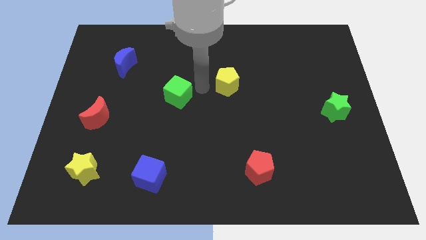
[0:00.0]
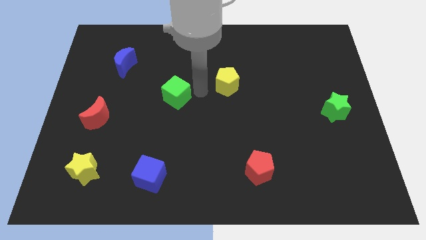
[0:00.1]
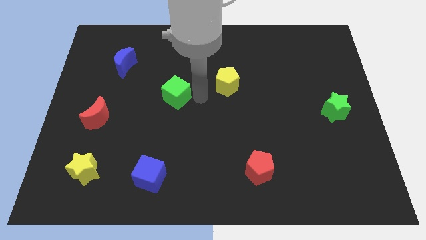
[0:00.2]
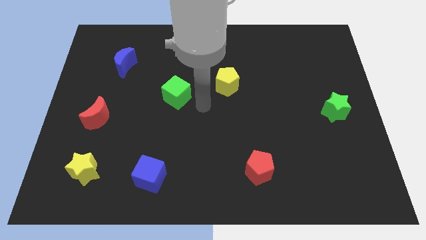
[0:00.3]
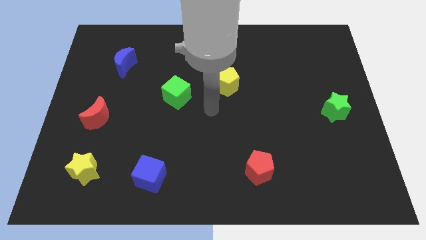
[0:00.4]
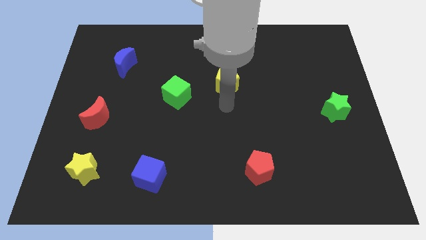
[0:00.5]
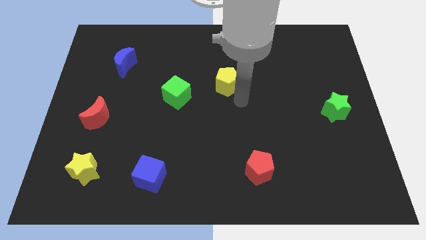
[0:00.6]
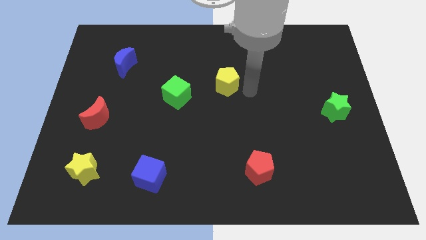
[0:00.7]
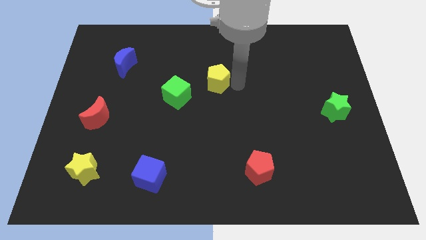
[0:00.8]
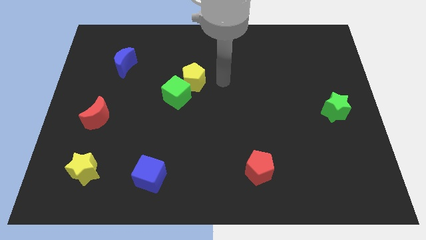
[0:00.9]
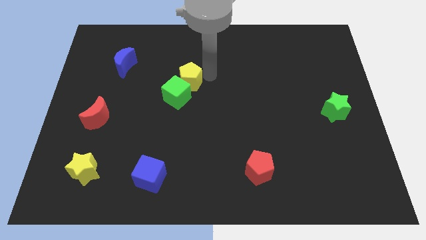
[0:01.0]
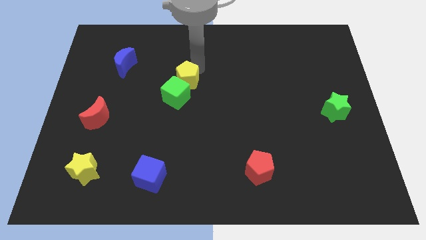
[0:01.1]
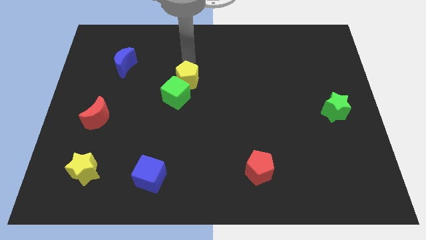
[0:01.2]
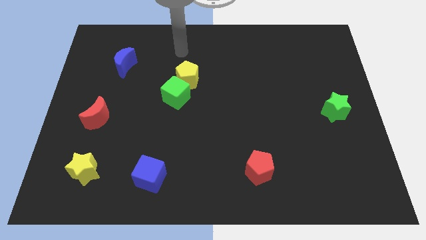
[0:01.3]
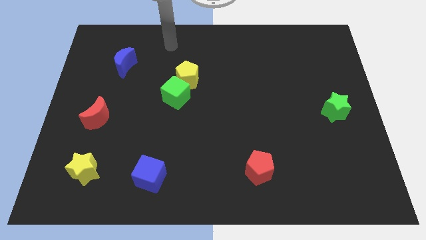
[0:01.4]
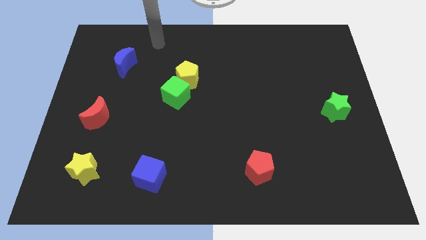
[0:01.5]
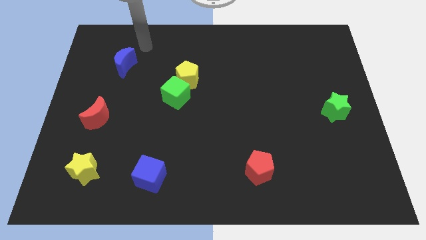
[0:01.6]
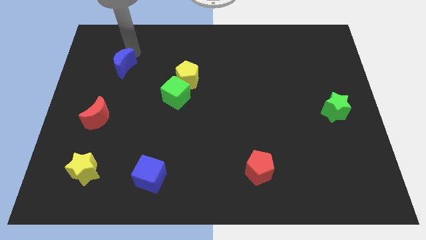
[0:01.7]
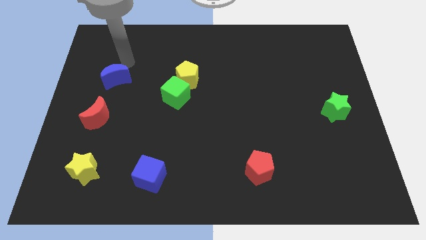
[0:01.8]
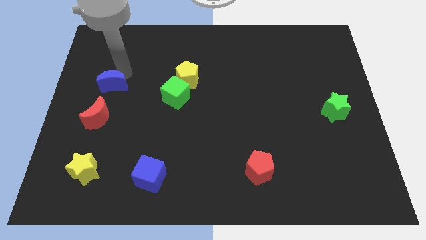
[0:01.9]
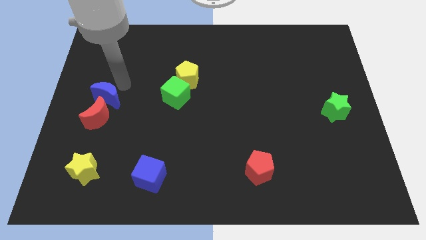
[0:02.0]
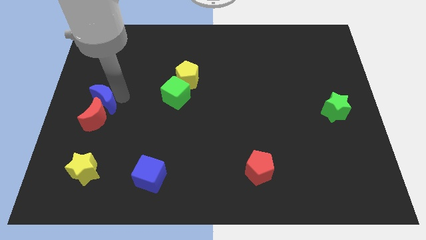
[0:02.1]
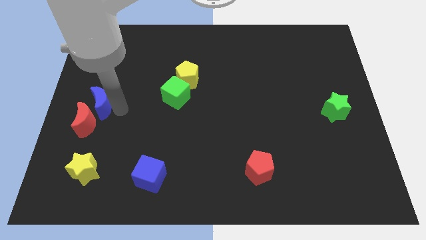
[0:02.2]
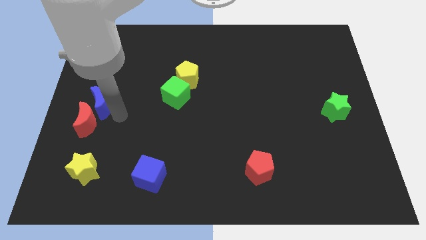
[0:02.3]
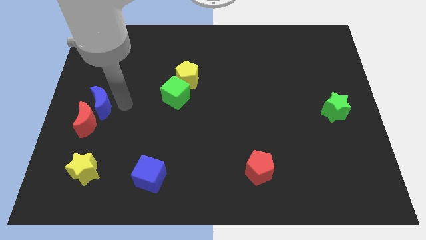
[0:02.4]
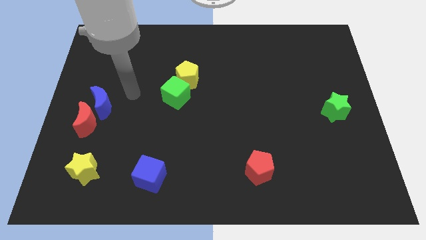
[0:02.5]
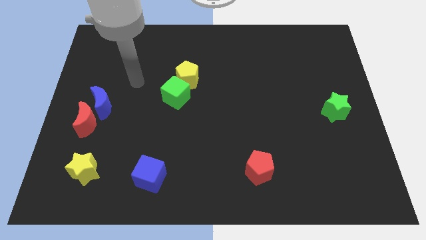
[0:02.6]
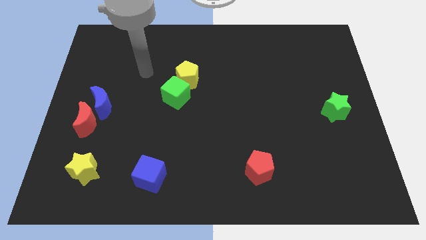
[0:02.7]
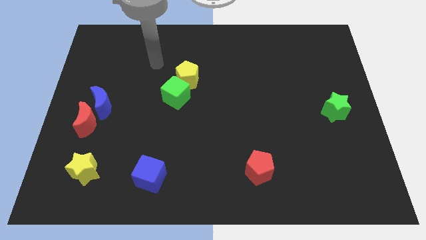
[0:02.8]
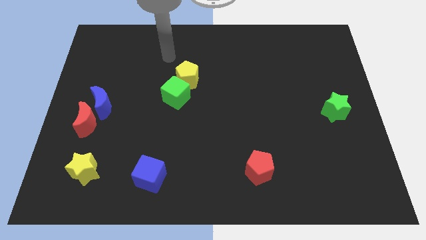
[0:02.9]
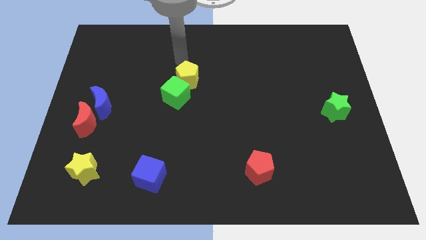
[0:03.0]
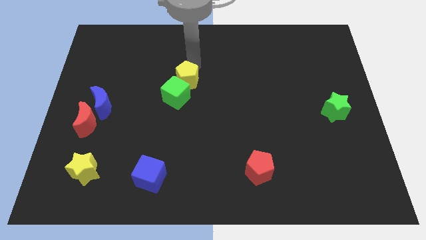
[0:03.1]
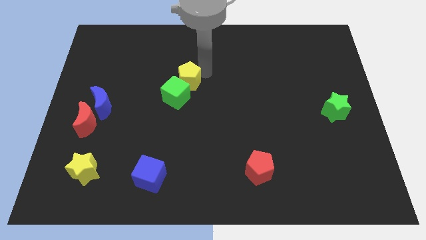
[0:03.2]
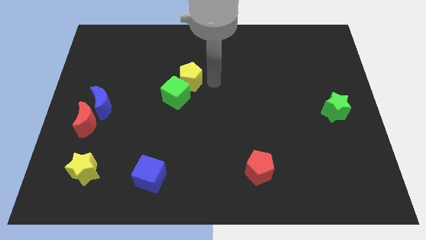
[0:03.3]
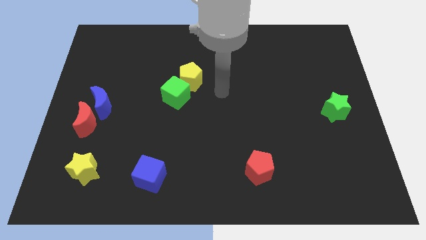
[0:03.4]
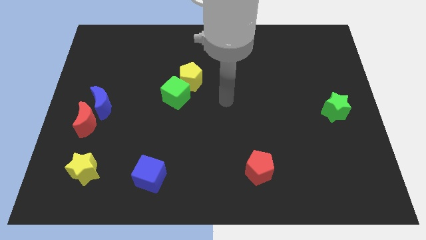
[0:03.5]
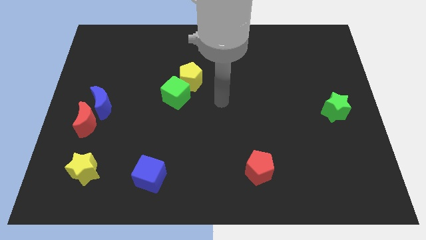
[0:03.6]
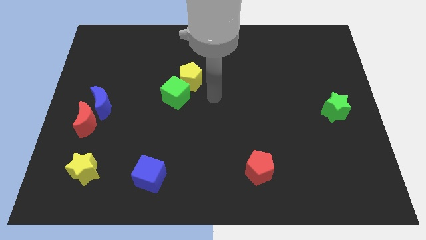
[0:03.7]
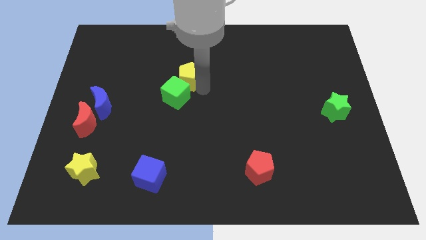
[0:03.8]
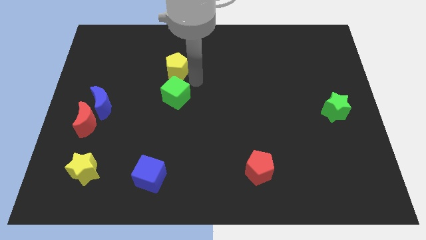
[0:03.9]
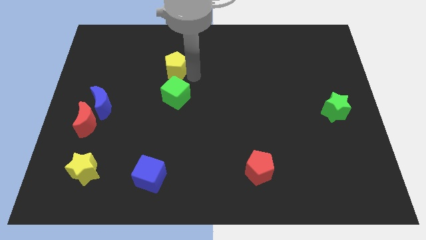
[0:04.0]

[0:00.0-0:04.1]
move yellow pentagon above green cube

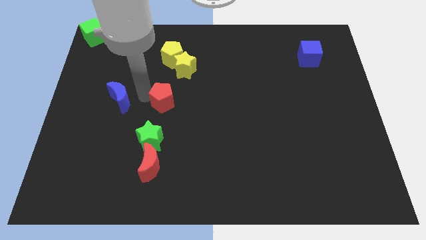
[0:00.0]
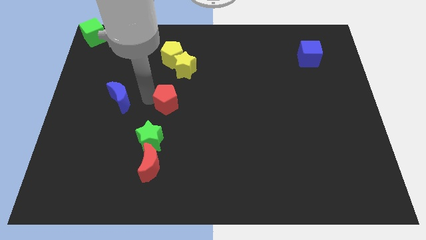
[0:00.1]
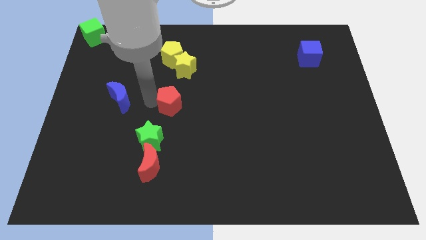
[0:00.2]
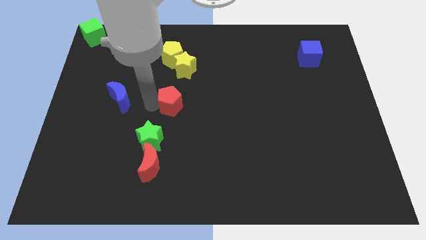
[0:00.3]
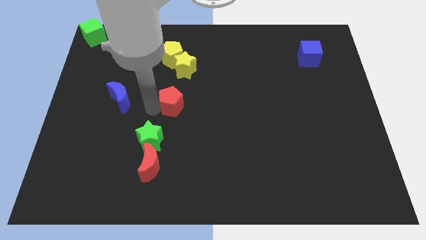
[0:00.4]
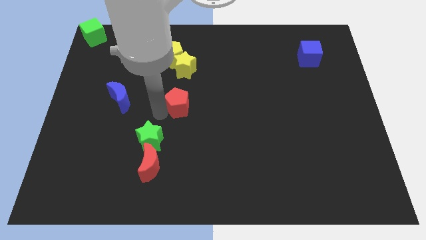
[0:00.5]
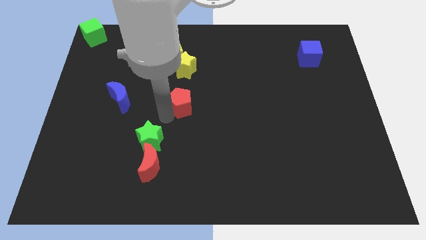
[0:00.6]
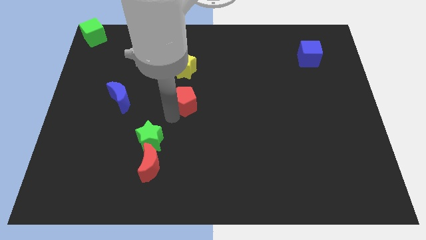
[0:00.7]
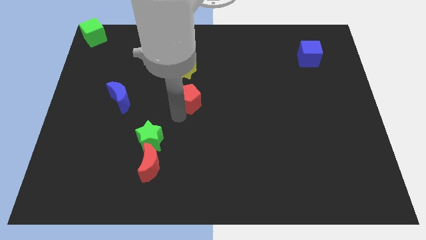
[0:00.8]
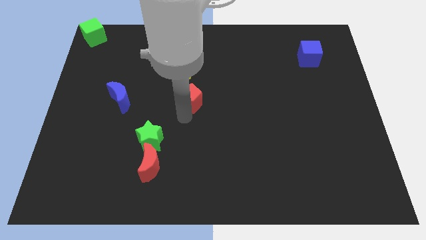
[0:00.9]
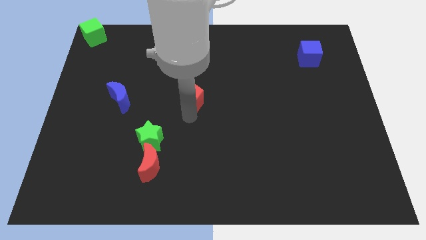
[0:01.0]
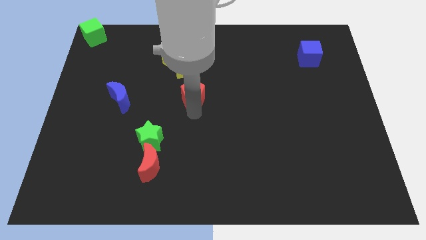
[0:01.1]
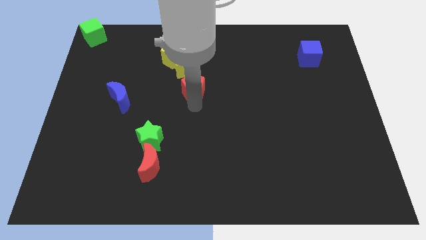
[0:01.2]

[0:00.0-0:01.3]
place the red pentagon at the bottom of yellow star

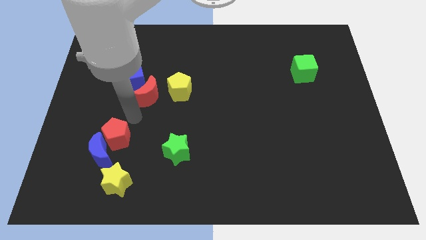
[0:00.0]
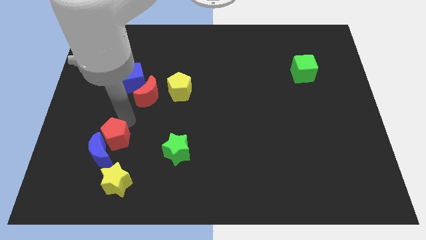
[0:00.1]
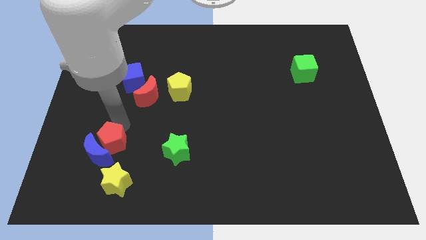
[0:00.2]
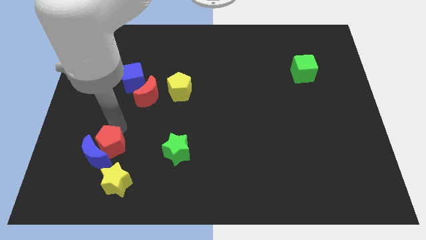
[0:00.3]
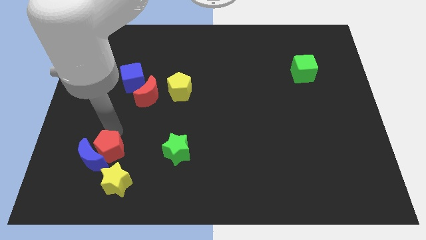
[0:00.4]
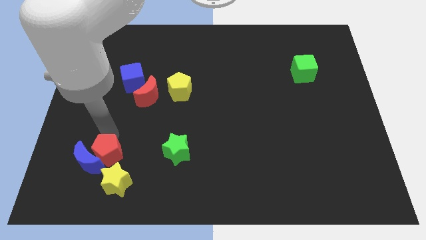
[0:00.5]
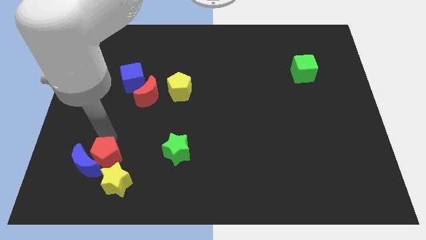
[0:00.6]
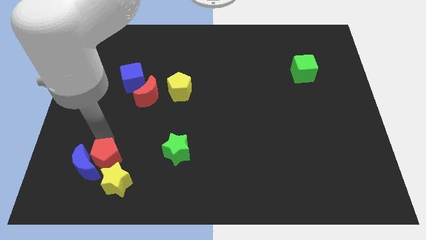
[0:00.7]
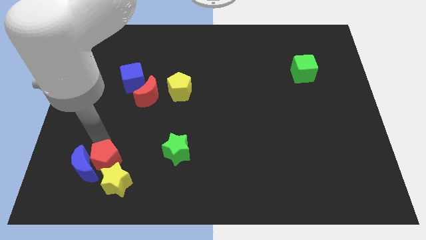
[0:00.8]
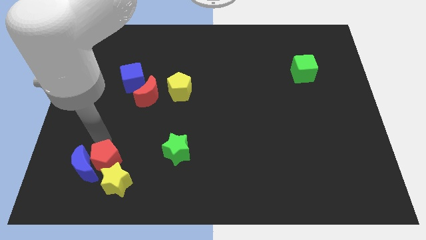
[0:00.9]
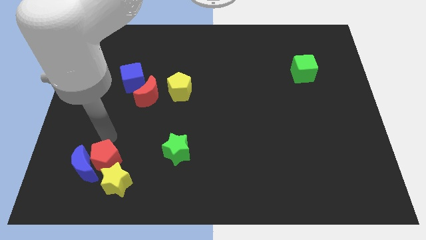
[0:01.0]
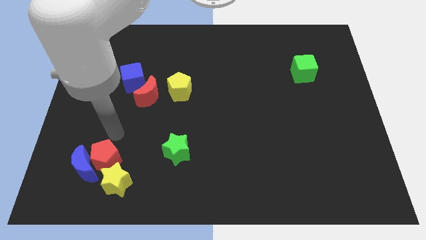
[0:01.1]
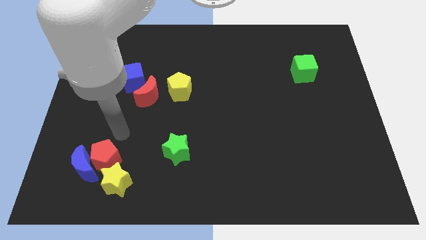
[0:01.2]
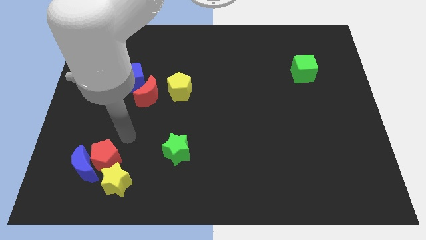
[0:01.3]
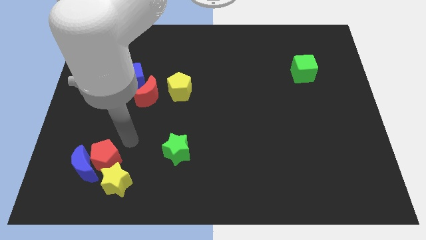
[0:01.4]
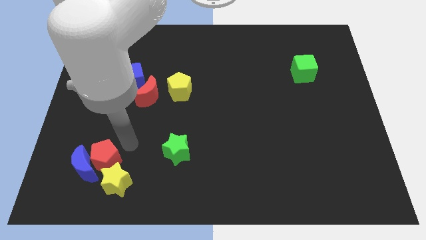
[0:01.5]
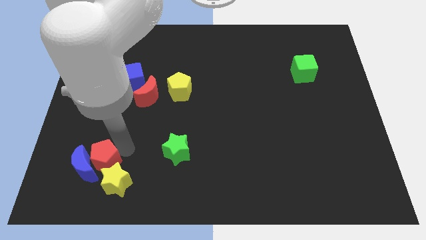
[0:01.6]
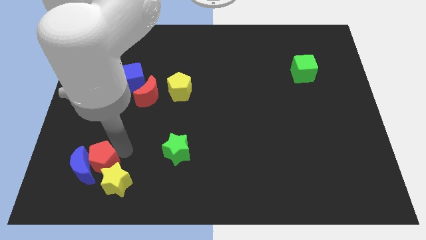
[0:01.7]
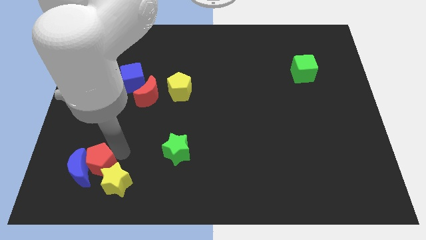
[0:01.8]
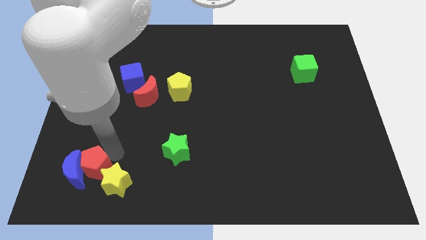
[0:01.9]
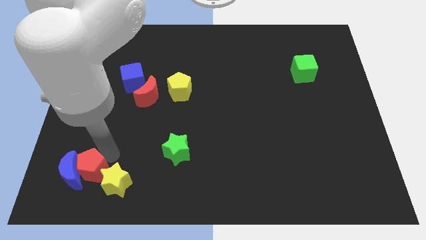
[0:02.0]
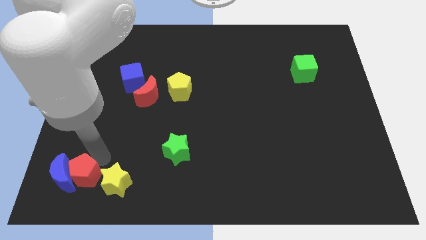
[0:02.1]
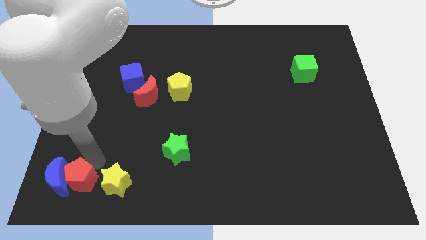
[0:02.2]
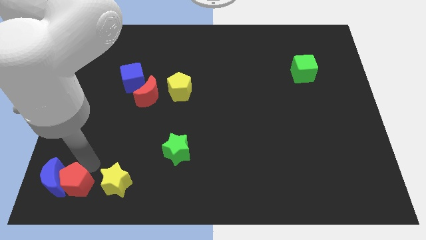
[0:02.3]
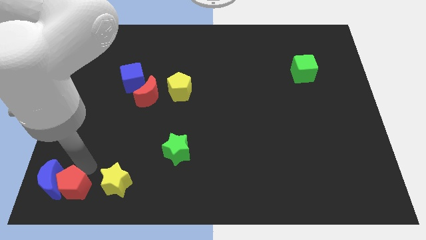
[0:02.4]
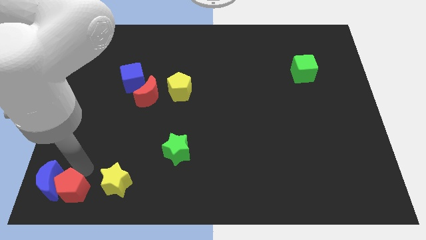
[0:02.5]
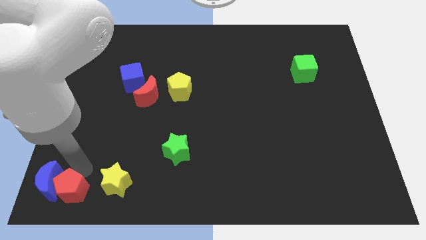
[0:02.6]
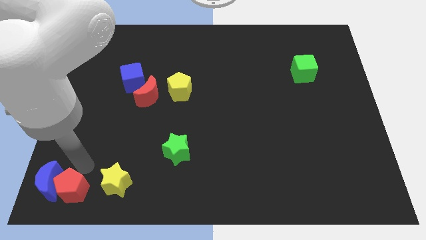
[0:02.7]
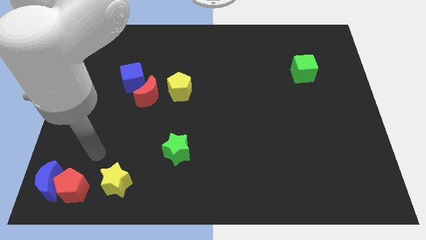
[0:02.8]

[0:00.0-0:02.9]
move red pentagon and blue moon to bottom left

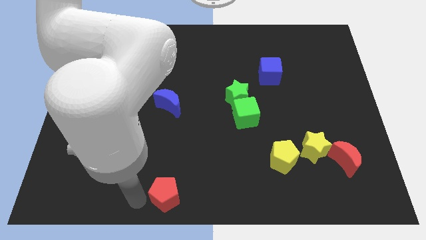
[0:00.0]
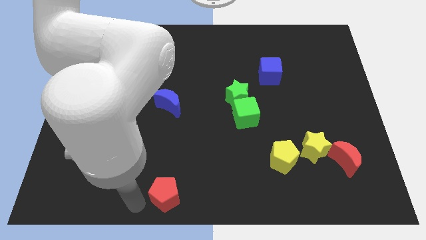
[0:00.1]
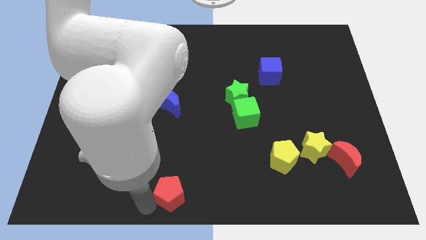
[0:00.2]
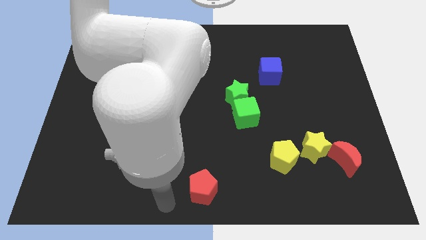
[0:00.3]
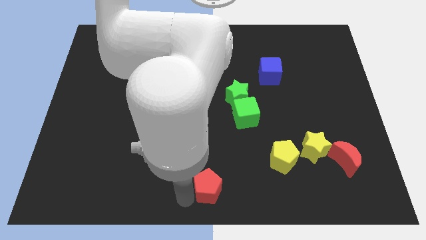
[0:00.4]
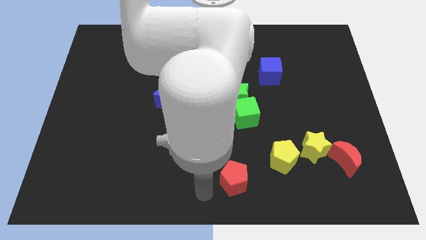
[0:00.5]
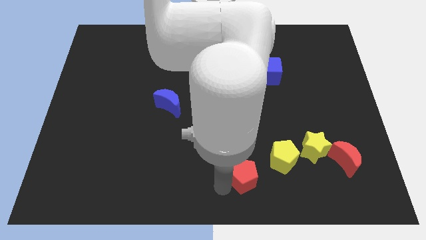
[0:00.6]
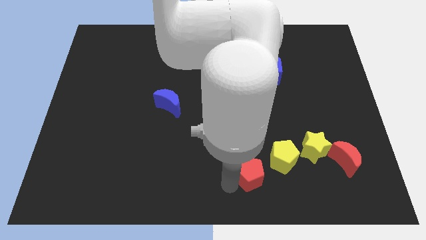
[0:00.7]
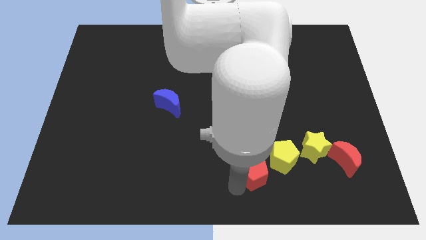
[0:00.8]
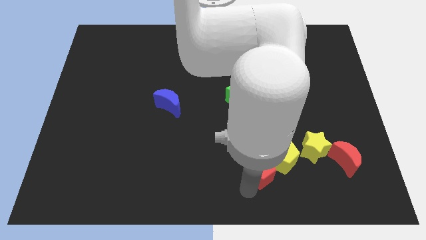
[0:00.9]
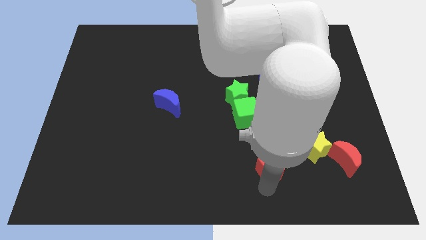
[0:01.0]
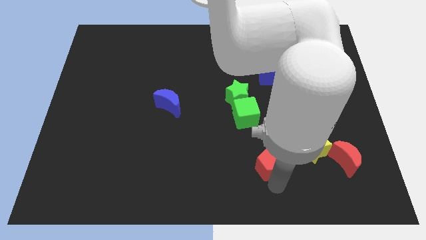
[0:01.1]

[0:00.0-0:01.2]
push the red pentagon into the yellow pentagon
